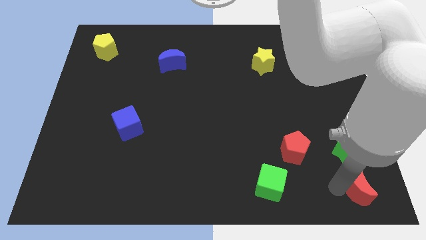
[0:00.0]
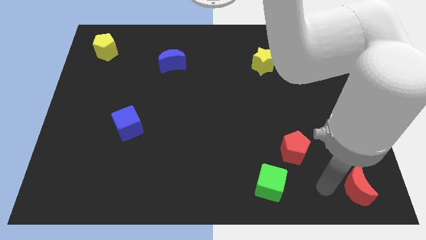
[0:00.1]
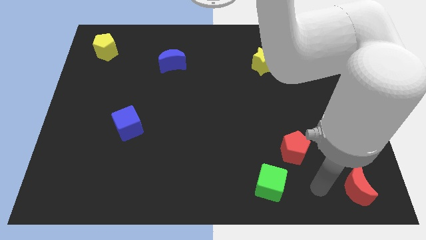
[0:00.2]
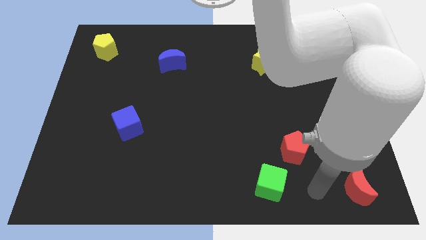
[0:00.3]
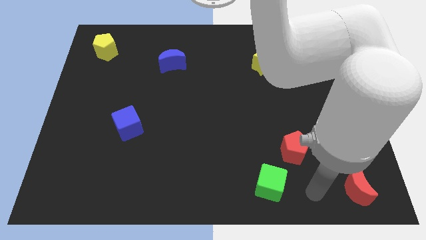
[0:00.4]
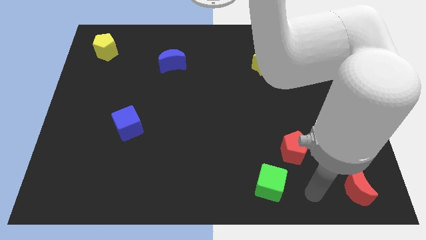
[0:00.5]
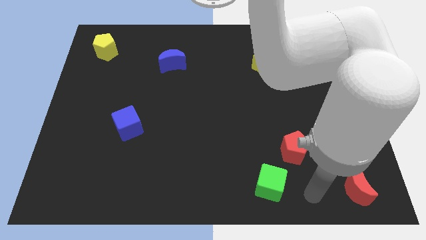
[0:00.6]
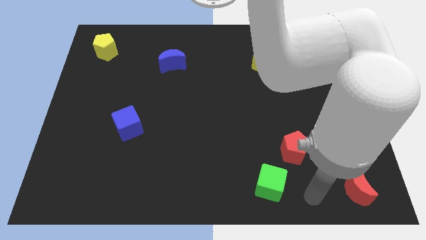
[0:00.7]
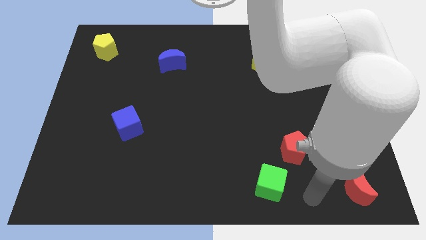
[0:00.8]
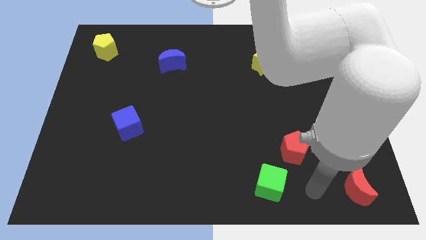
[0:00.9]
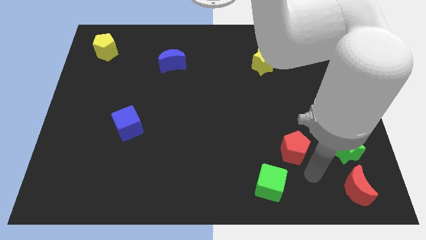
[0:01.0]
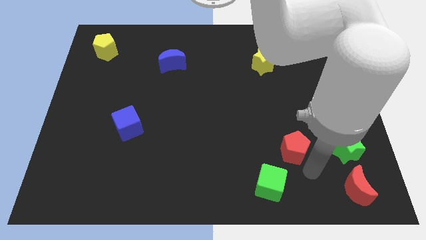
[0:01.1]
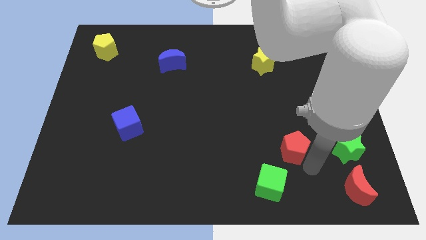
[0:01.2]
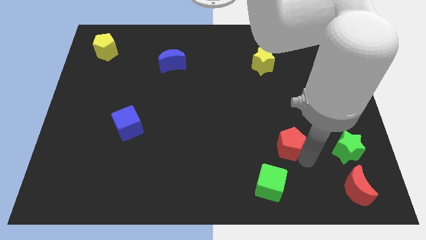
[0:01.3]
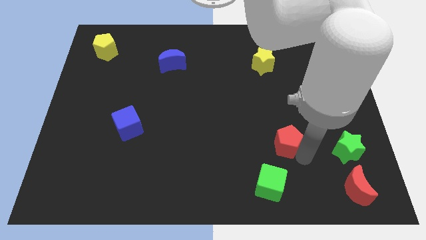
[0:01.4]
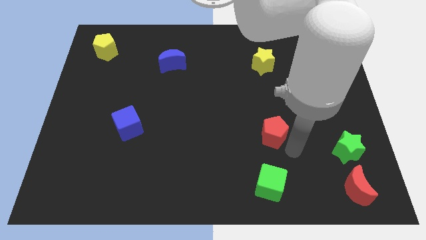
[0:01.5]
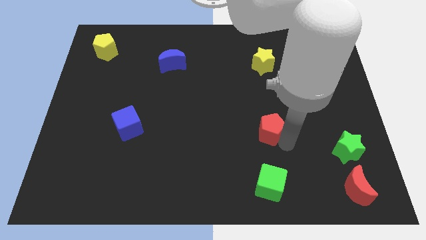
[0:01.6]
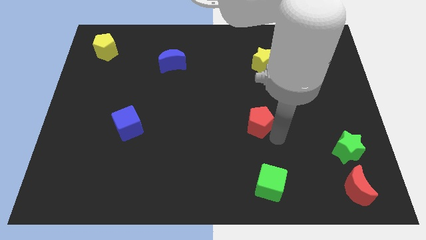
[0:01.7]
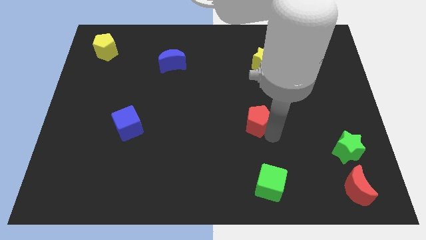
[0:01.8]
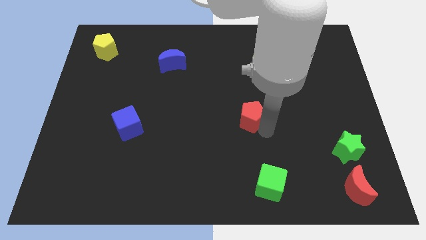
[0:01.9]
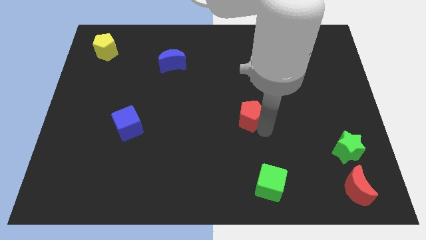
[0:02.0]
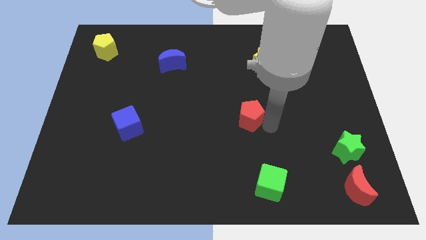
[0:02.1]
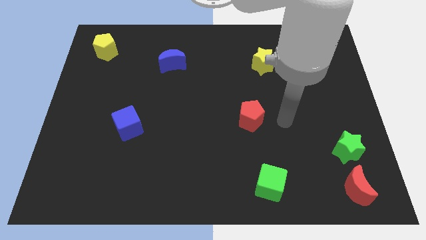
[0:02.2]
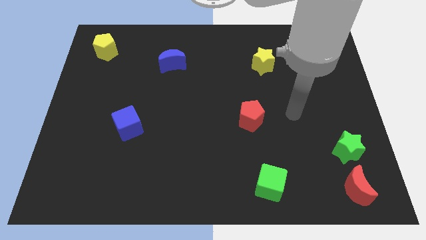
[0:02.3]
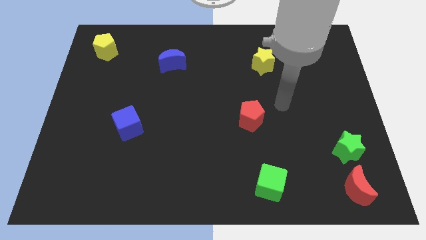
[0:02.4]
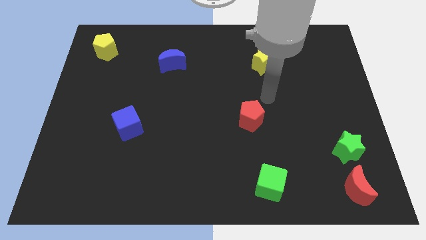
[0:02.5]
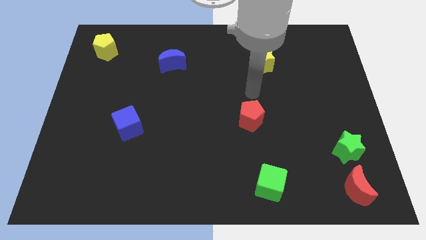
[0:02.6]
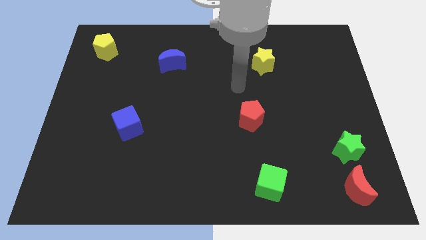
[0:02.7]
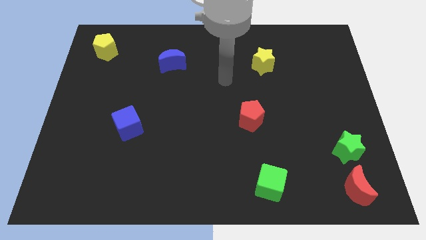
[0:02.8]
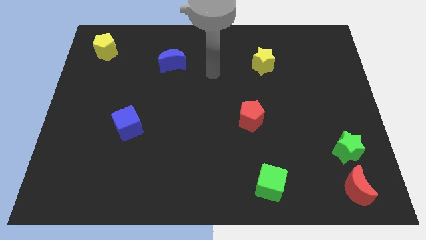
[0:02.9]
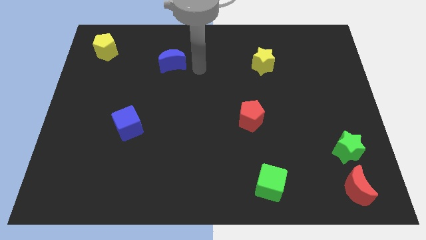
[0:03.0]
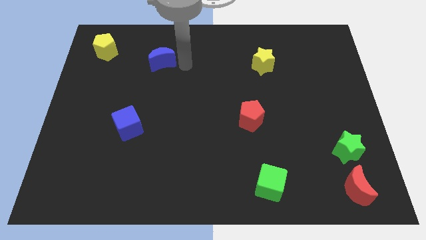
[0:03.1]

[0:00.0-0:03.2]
place the red pentagon at the center of the board

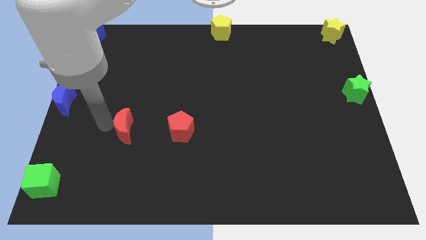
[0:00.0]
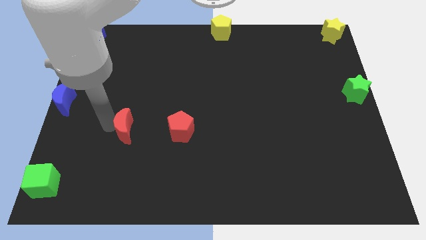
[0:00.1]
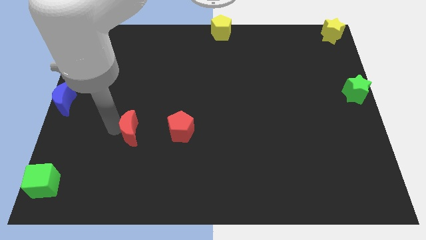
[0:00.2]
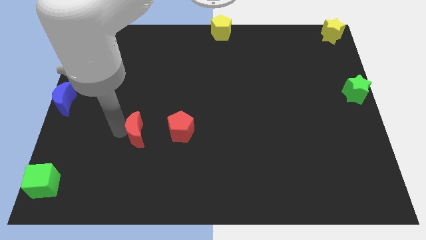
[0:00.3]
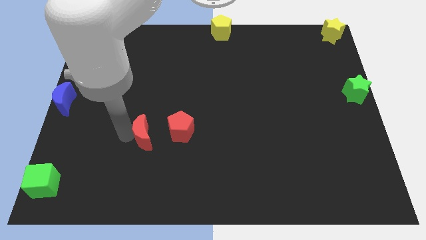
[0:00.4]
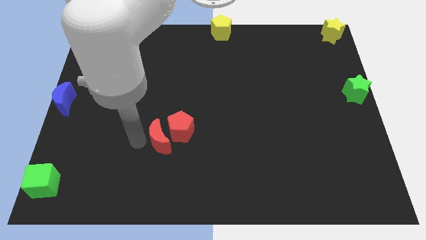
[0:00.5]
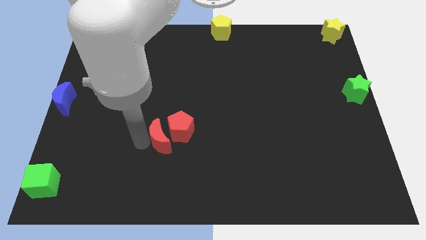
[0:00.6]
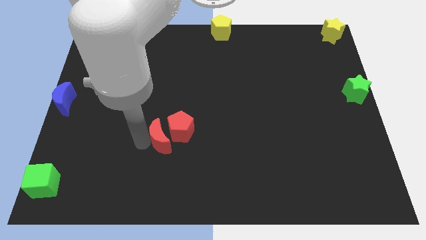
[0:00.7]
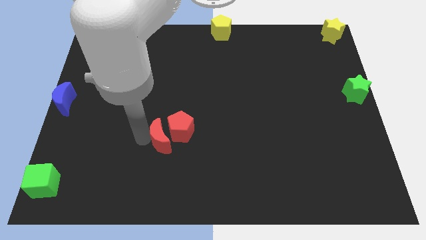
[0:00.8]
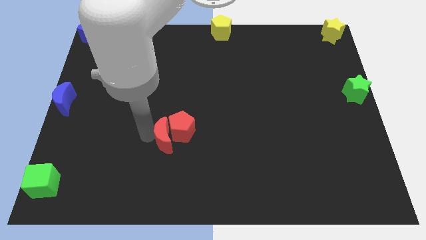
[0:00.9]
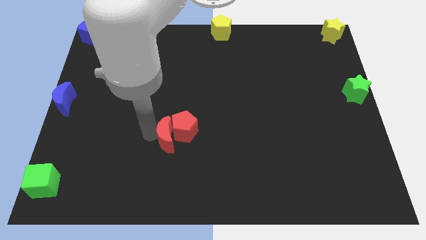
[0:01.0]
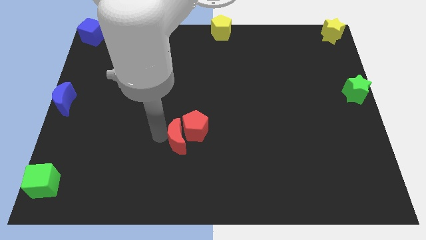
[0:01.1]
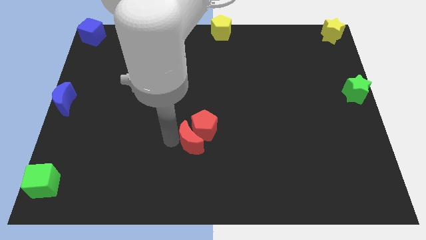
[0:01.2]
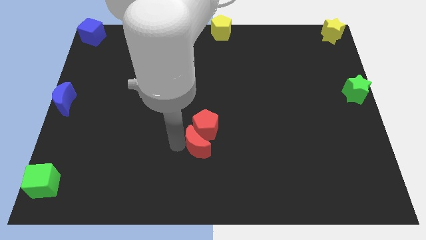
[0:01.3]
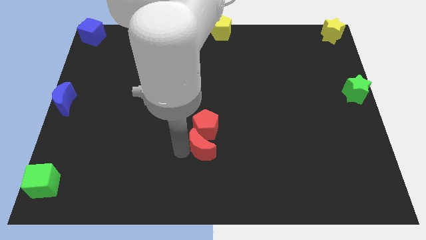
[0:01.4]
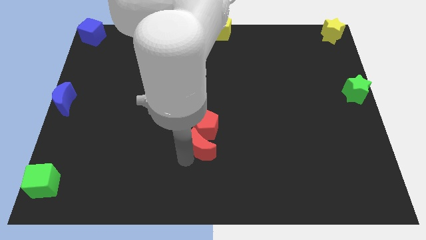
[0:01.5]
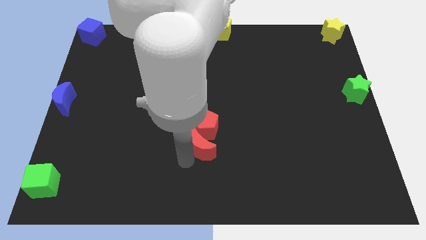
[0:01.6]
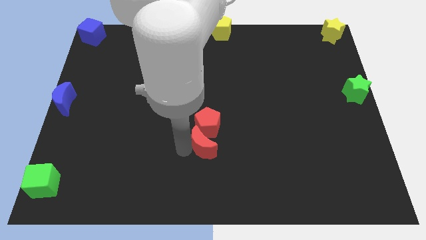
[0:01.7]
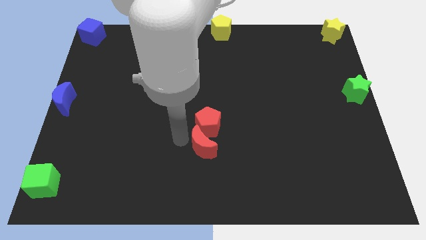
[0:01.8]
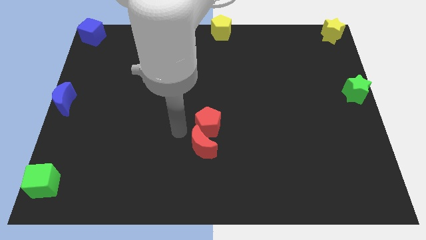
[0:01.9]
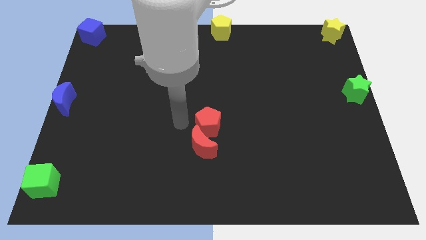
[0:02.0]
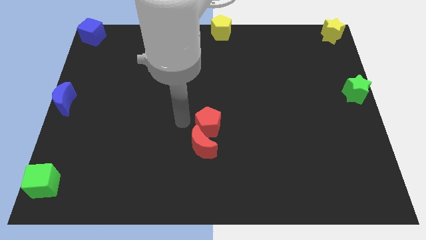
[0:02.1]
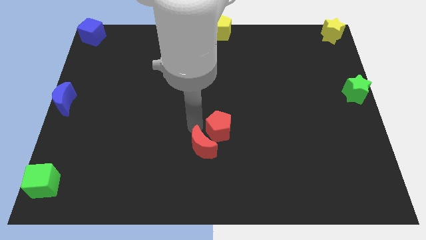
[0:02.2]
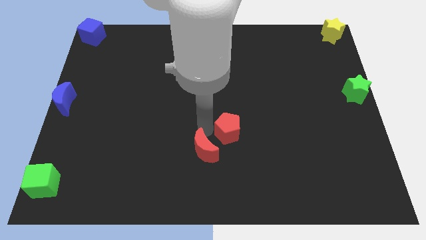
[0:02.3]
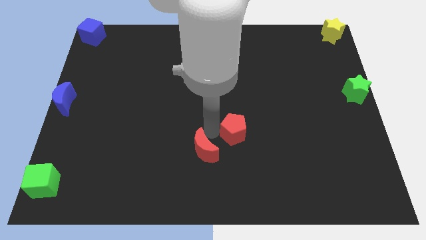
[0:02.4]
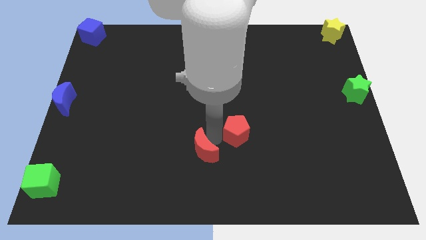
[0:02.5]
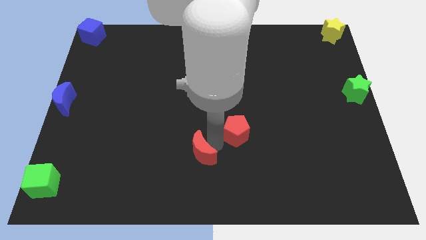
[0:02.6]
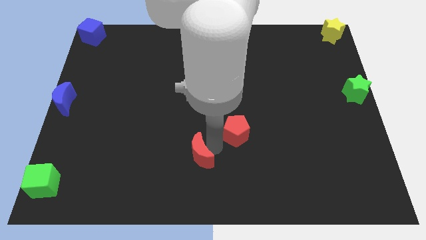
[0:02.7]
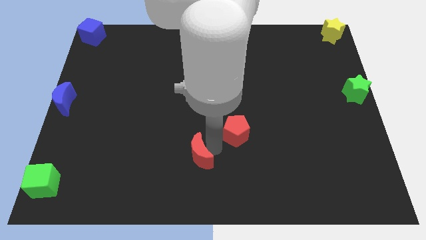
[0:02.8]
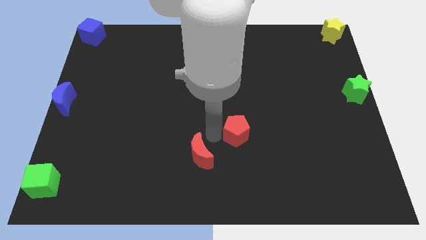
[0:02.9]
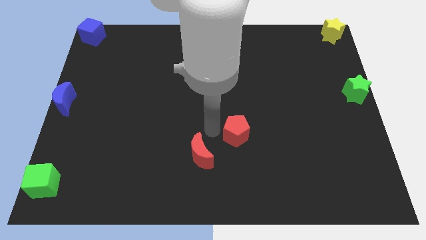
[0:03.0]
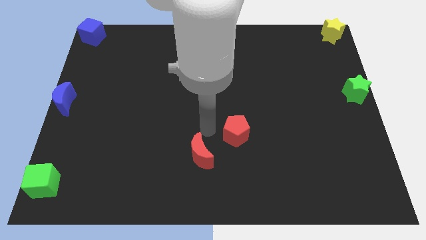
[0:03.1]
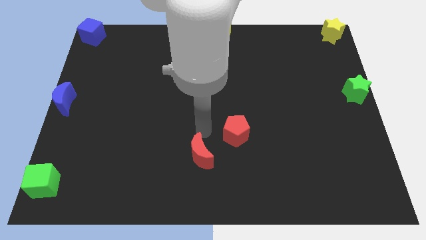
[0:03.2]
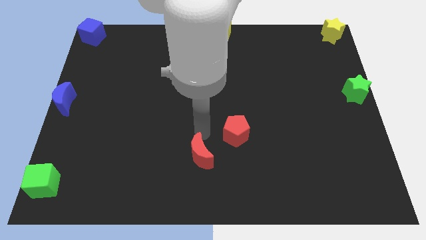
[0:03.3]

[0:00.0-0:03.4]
push the red blocks slightly to the right

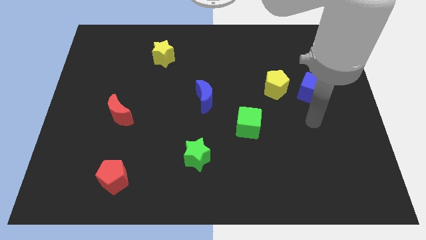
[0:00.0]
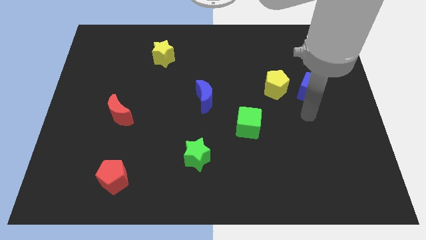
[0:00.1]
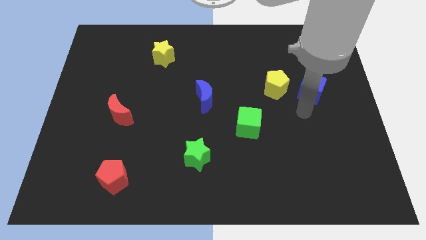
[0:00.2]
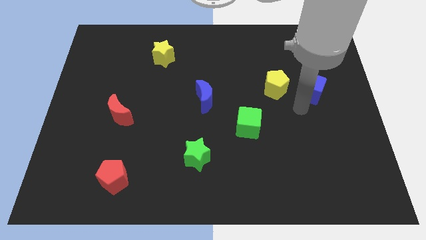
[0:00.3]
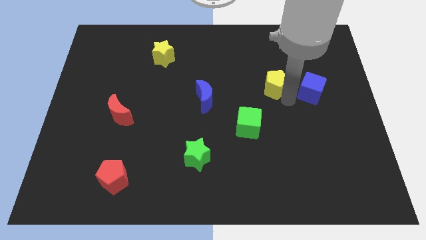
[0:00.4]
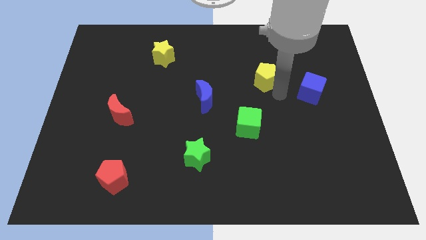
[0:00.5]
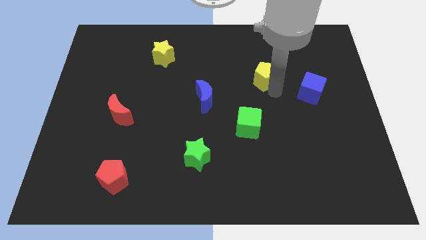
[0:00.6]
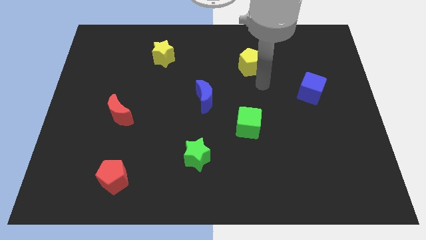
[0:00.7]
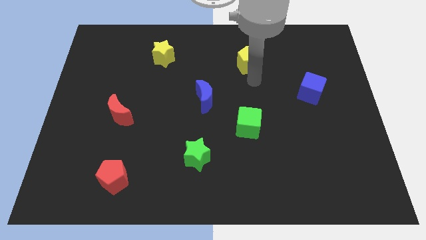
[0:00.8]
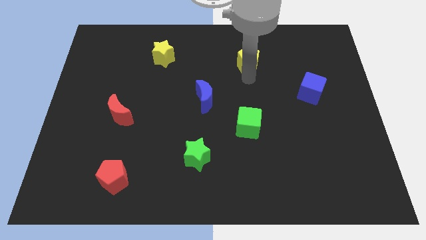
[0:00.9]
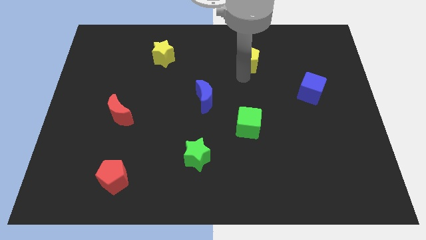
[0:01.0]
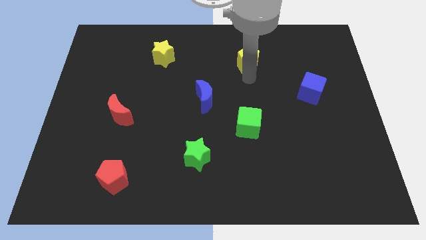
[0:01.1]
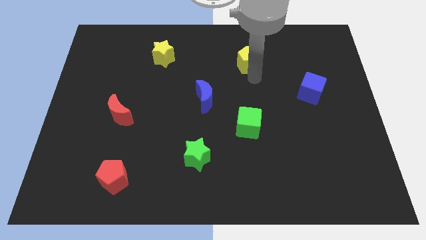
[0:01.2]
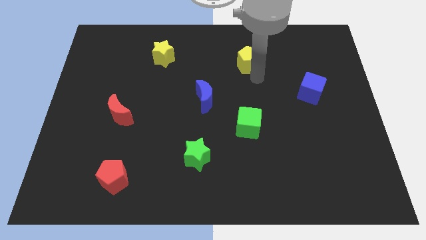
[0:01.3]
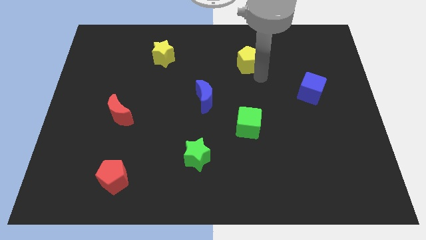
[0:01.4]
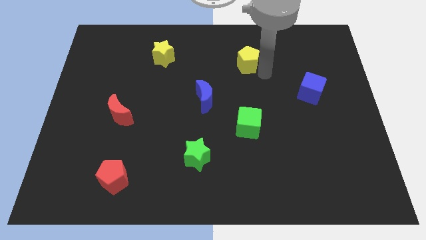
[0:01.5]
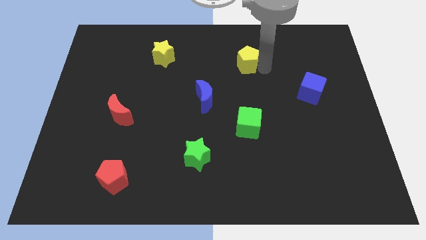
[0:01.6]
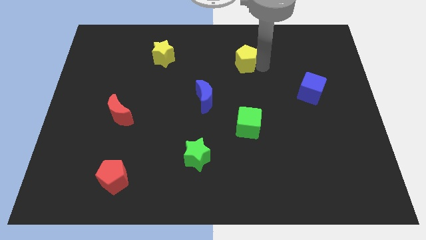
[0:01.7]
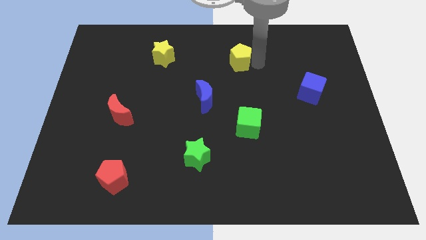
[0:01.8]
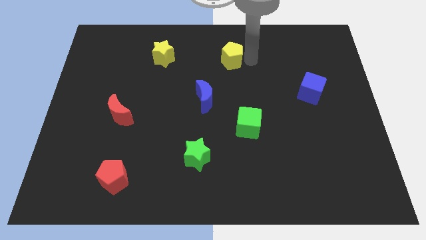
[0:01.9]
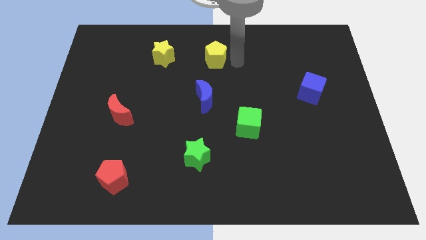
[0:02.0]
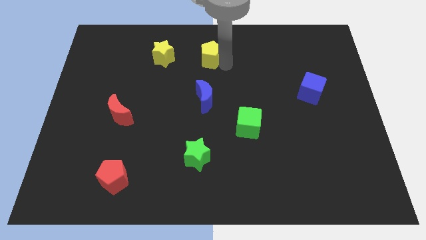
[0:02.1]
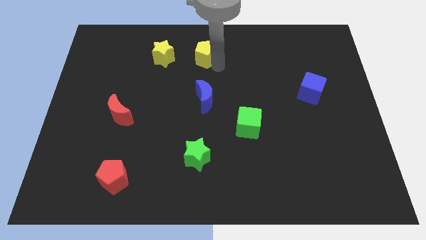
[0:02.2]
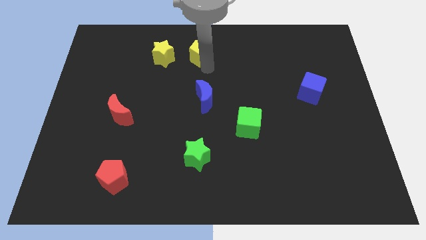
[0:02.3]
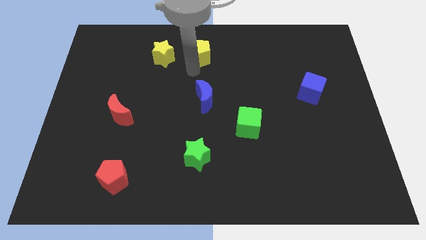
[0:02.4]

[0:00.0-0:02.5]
move the yellow pentagon above the blue moon
